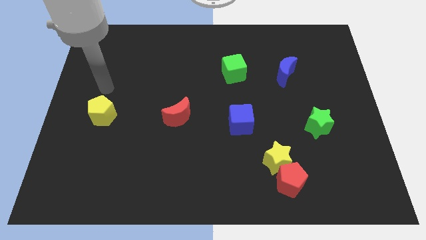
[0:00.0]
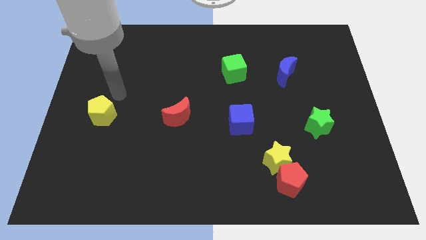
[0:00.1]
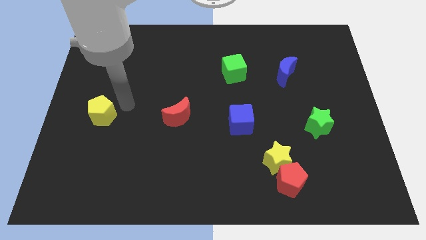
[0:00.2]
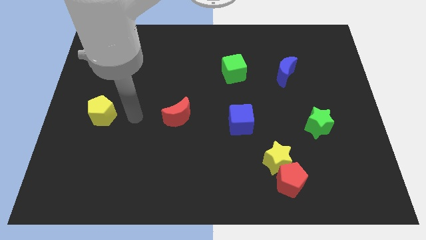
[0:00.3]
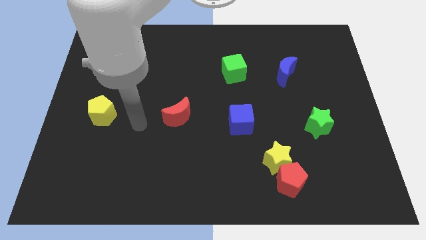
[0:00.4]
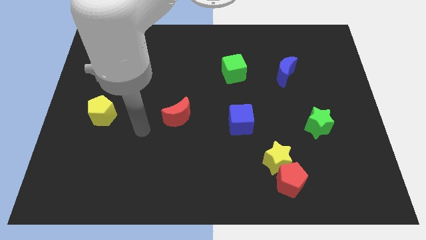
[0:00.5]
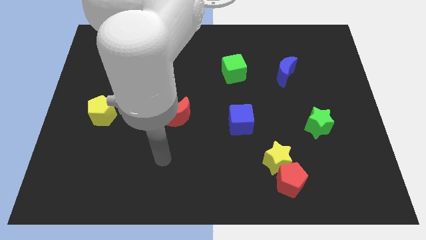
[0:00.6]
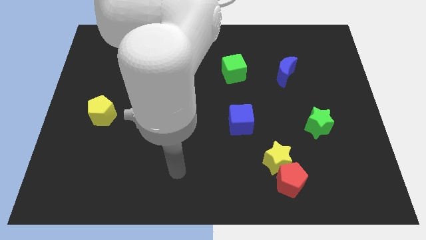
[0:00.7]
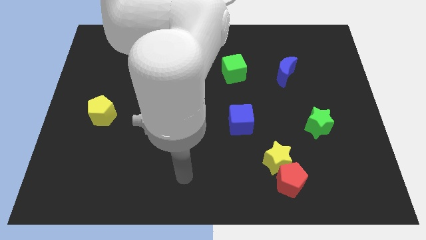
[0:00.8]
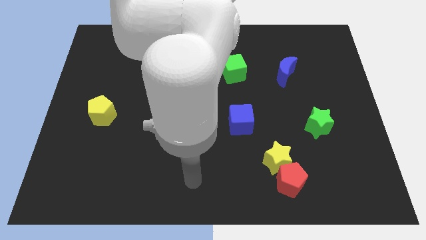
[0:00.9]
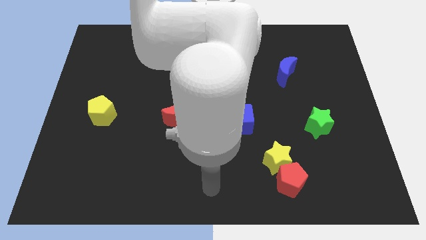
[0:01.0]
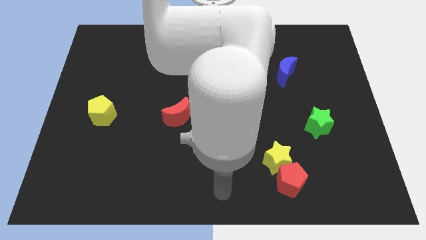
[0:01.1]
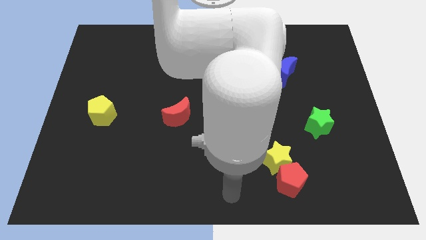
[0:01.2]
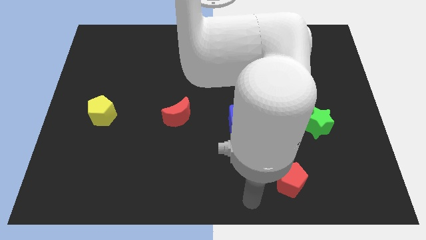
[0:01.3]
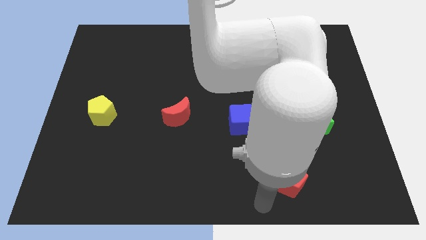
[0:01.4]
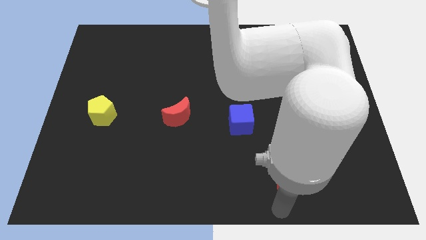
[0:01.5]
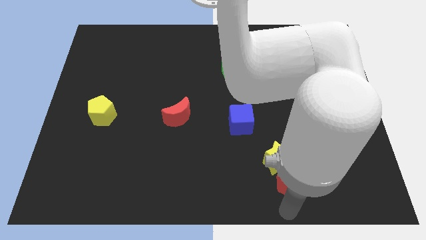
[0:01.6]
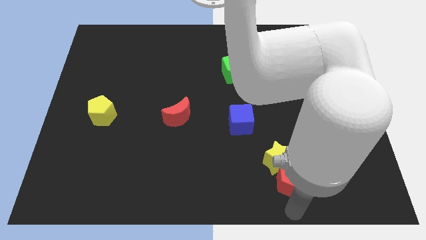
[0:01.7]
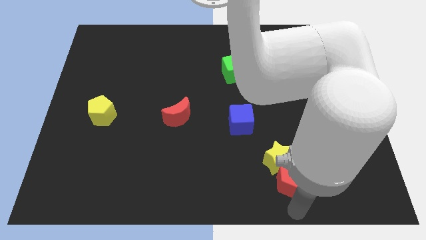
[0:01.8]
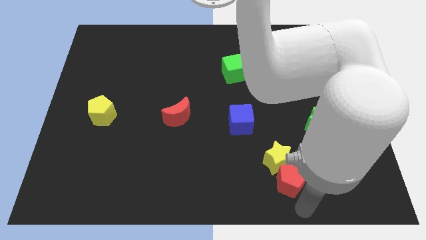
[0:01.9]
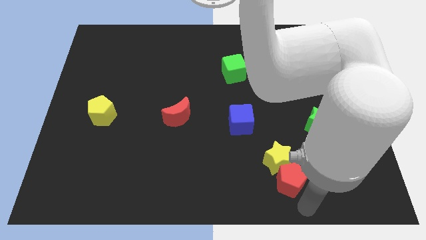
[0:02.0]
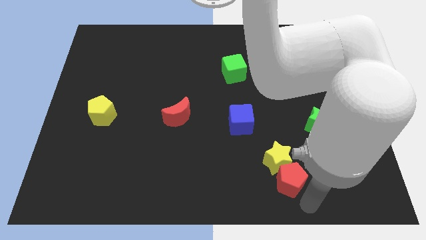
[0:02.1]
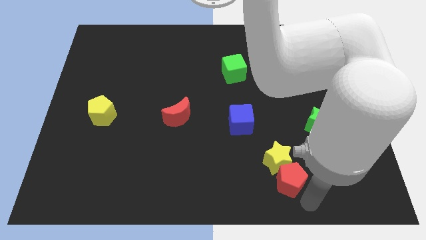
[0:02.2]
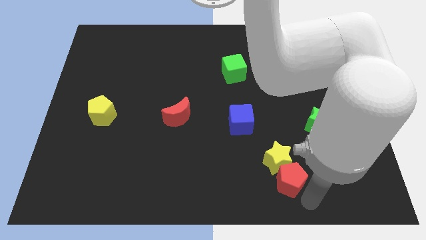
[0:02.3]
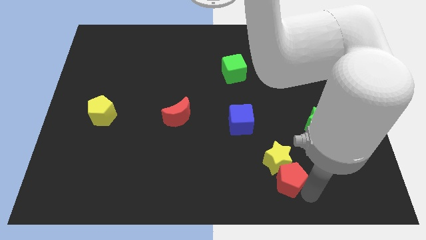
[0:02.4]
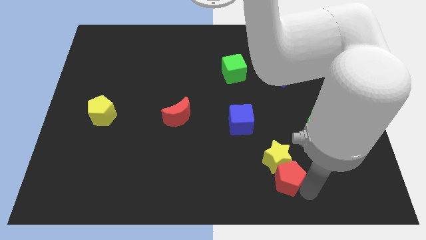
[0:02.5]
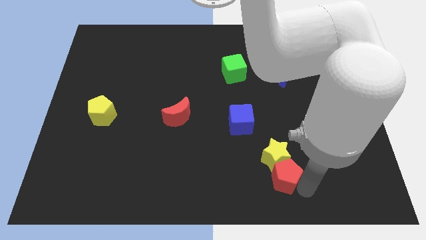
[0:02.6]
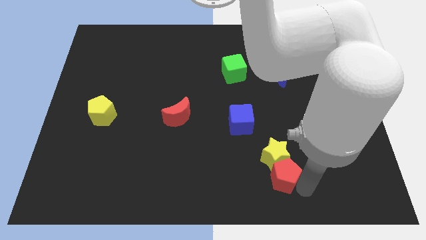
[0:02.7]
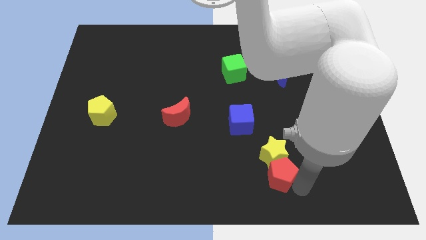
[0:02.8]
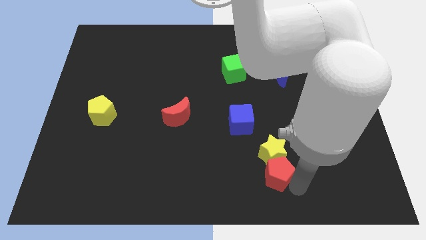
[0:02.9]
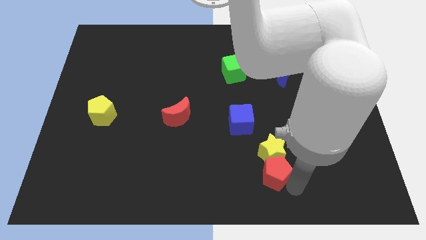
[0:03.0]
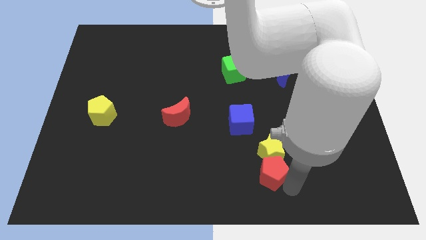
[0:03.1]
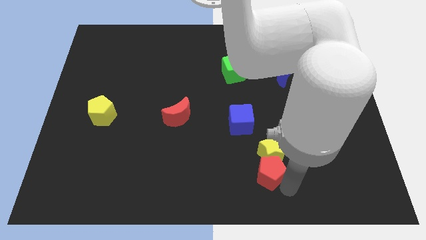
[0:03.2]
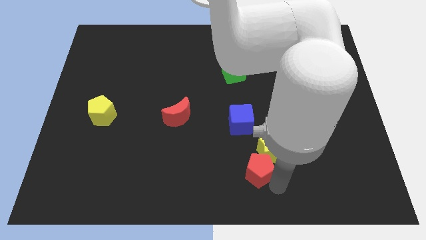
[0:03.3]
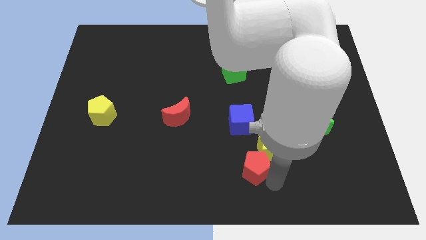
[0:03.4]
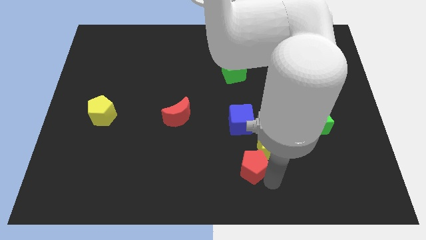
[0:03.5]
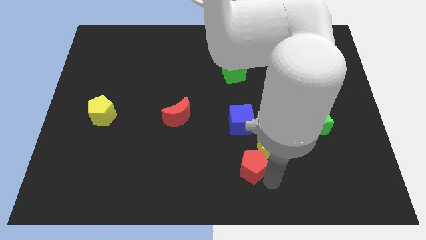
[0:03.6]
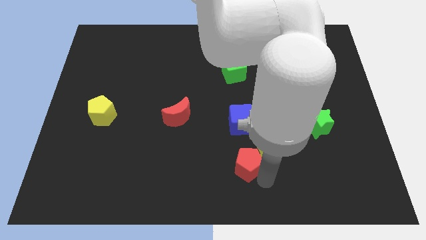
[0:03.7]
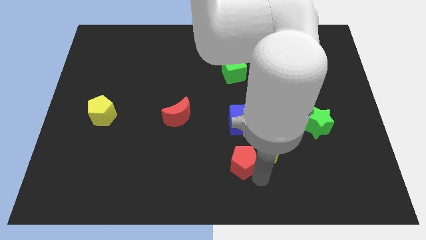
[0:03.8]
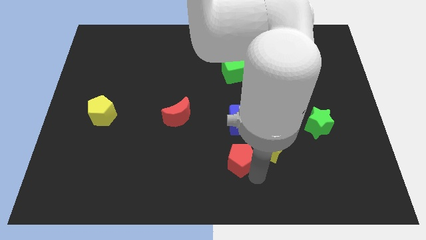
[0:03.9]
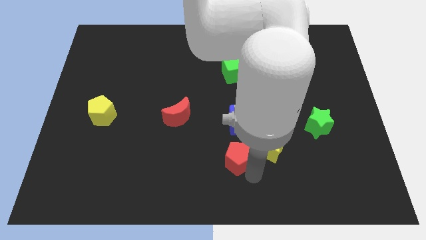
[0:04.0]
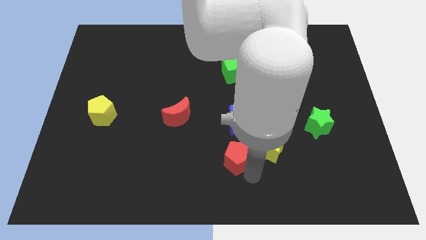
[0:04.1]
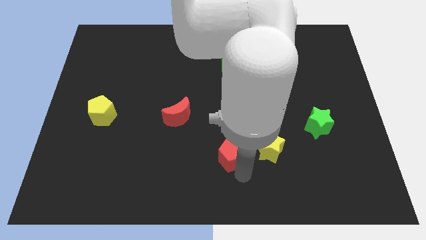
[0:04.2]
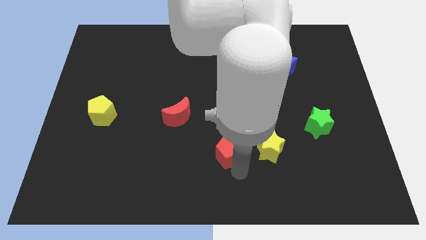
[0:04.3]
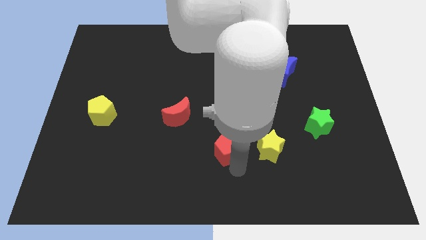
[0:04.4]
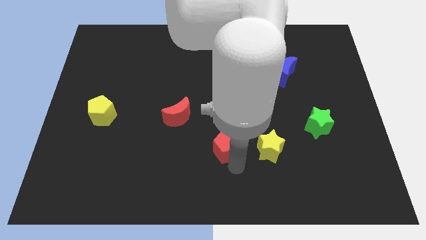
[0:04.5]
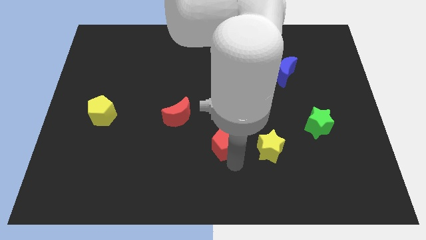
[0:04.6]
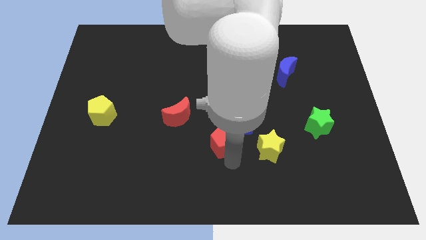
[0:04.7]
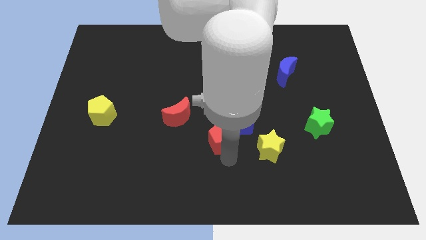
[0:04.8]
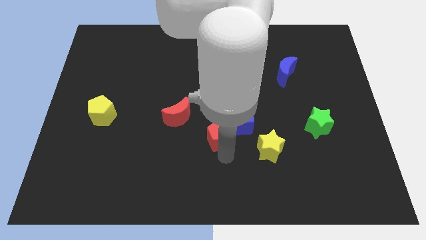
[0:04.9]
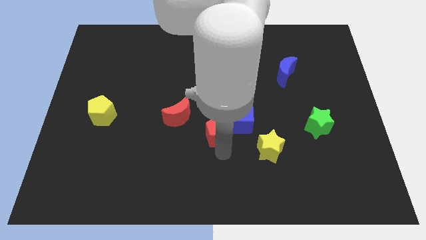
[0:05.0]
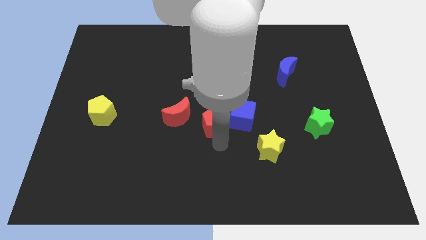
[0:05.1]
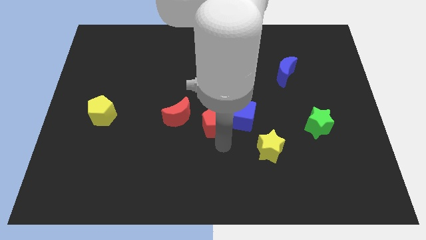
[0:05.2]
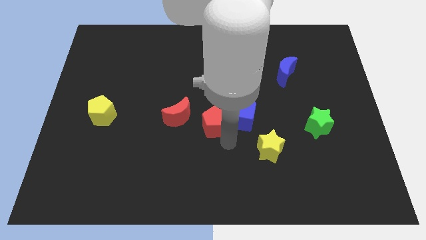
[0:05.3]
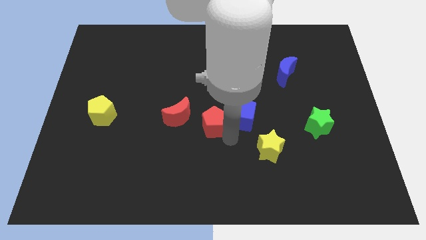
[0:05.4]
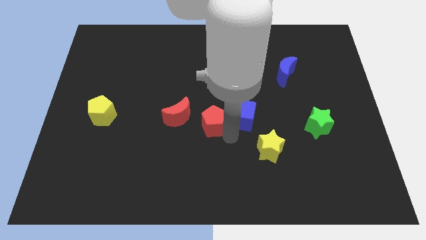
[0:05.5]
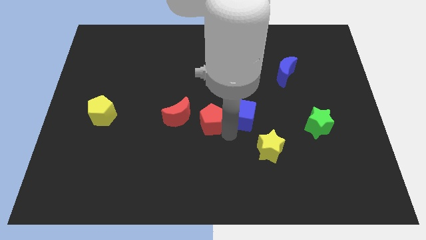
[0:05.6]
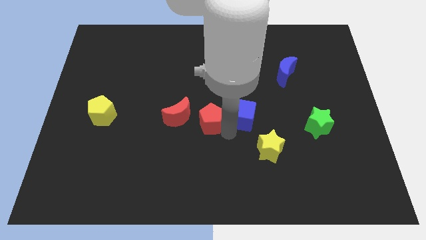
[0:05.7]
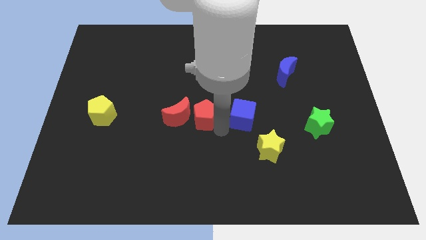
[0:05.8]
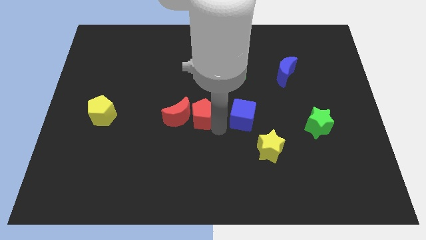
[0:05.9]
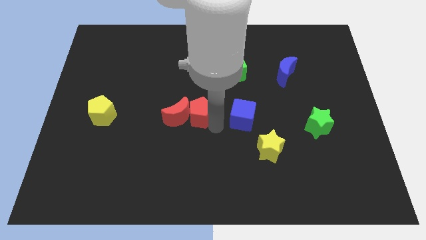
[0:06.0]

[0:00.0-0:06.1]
move the red pentagon next to the red moon

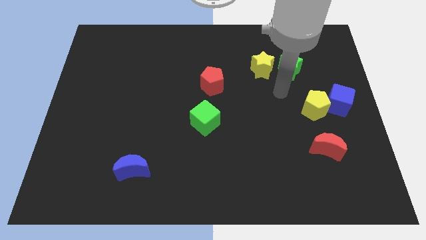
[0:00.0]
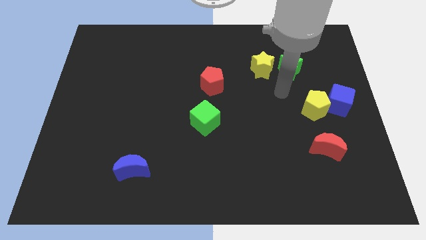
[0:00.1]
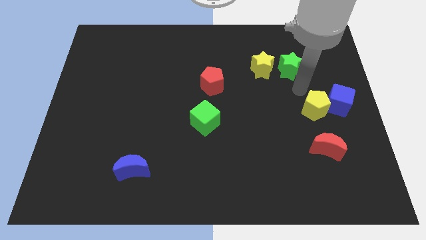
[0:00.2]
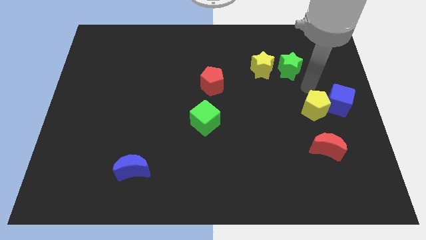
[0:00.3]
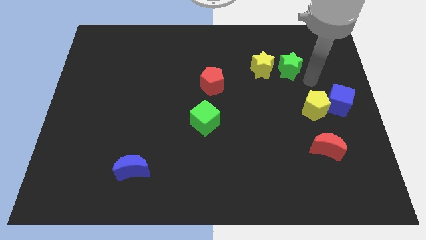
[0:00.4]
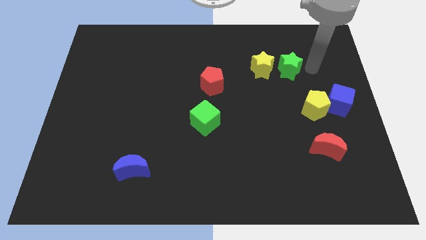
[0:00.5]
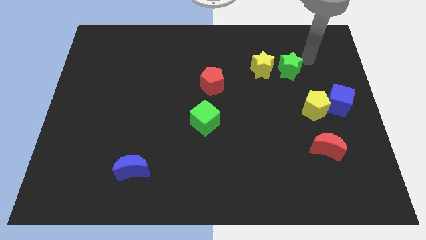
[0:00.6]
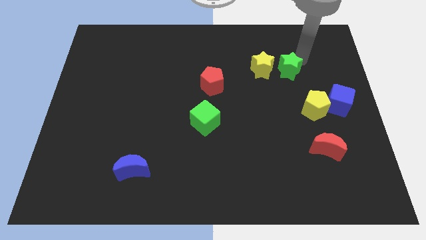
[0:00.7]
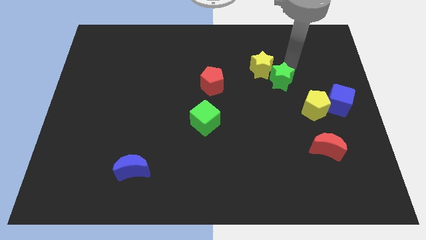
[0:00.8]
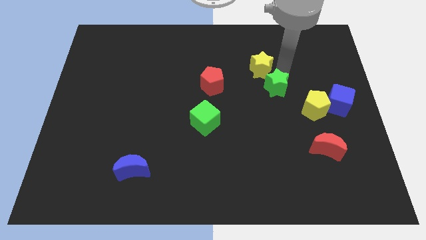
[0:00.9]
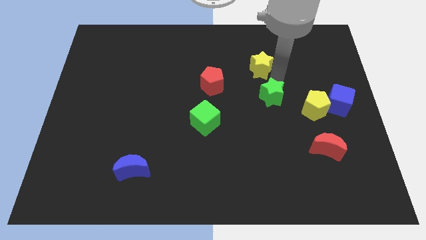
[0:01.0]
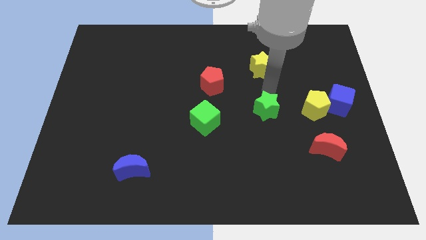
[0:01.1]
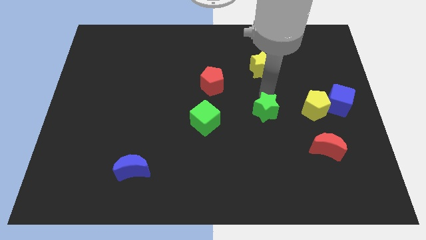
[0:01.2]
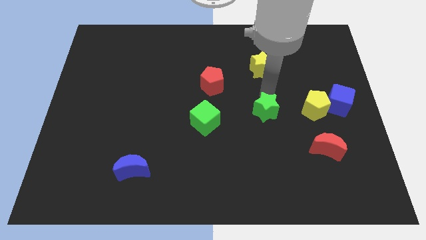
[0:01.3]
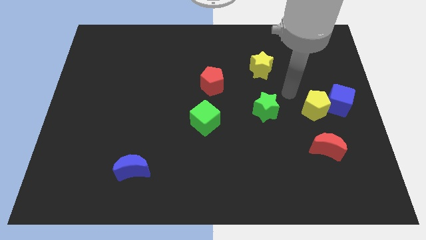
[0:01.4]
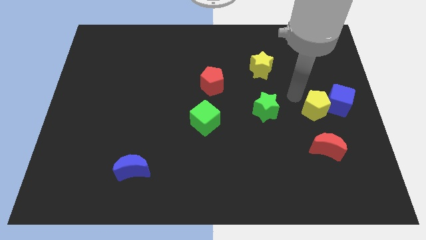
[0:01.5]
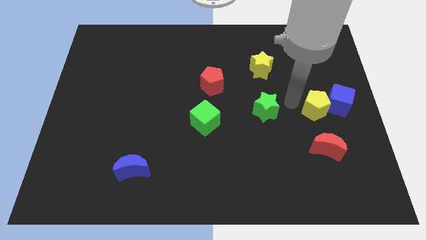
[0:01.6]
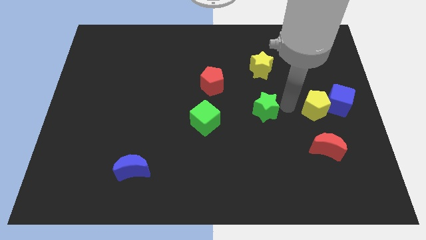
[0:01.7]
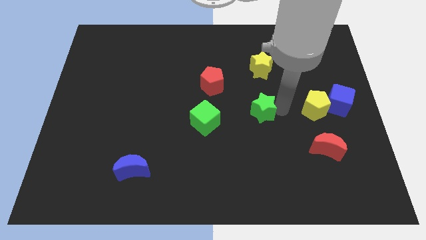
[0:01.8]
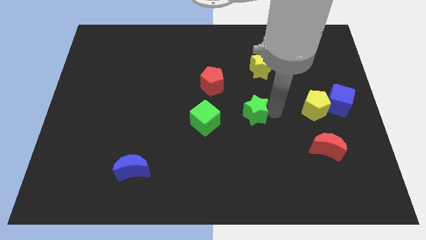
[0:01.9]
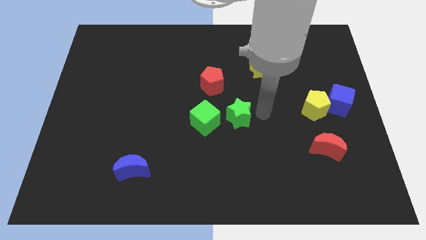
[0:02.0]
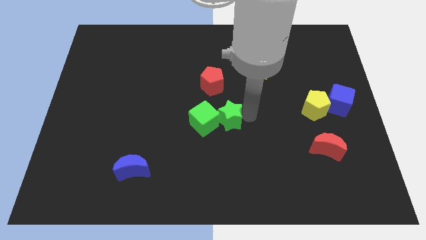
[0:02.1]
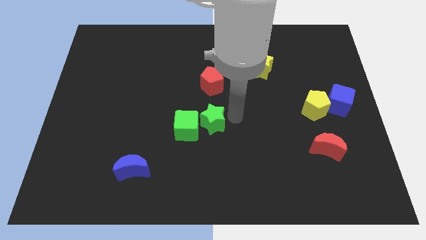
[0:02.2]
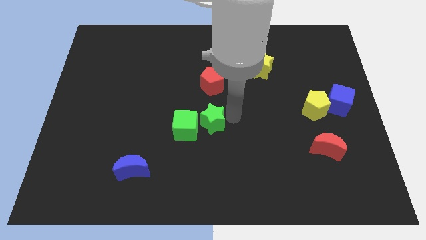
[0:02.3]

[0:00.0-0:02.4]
slide the green star next to the green cube
